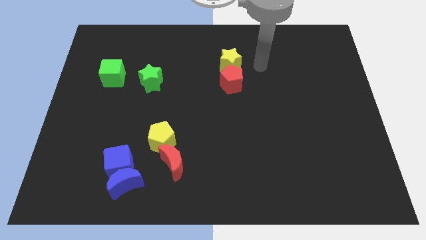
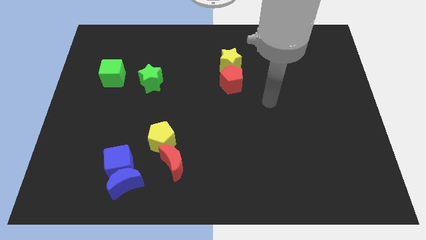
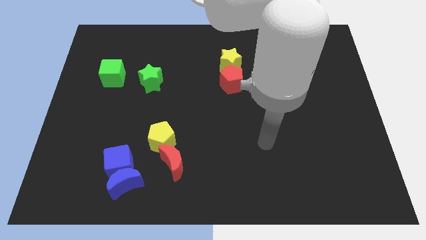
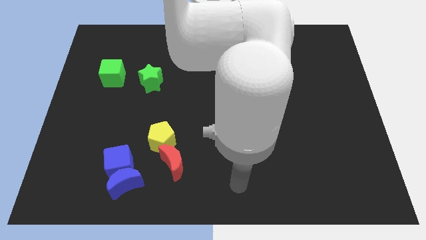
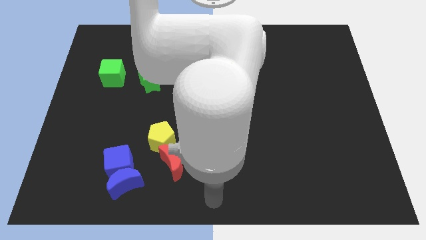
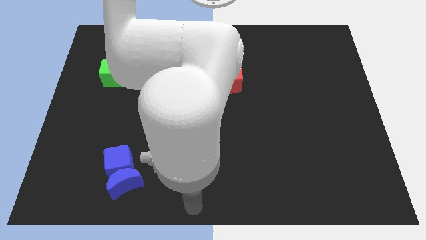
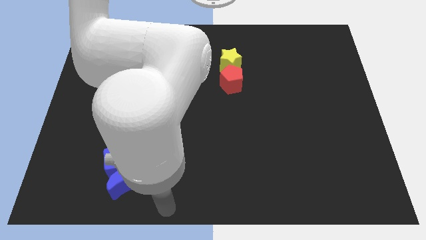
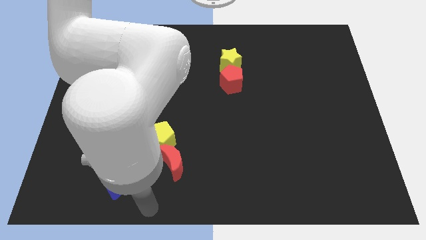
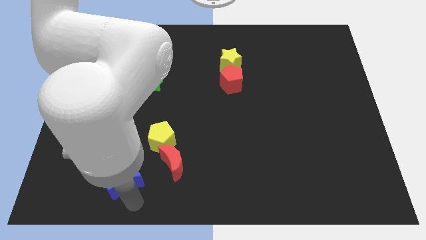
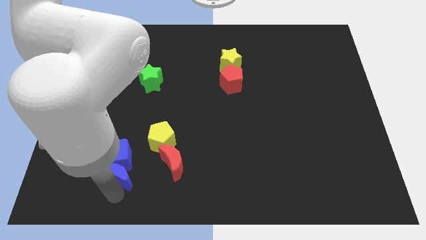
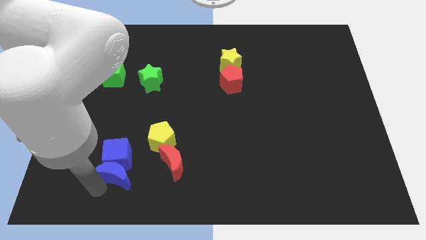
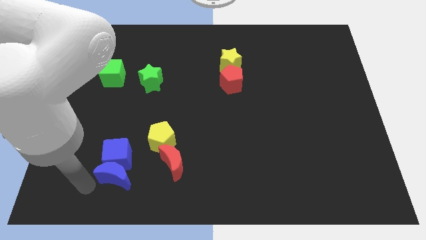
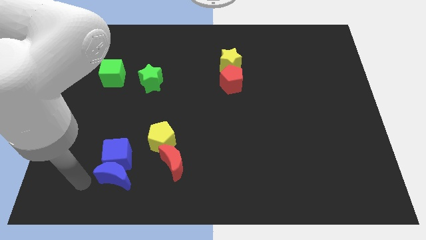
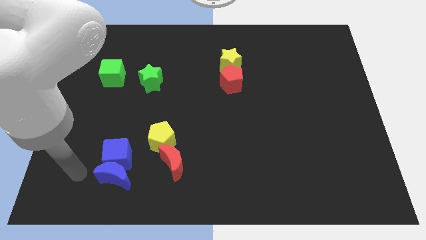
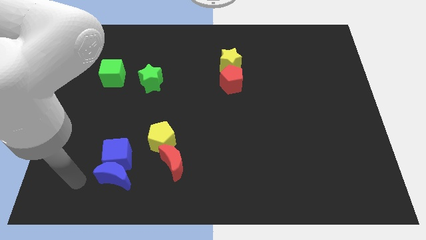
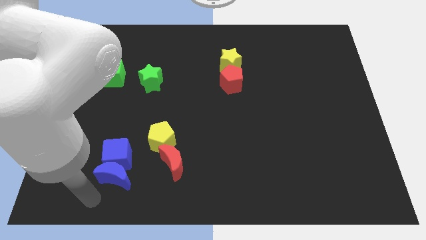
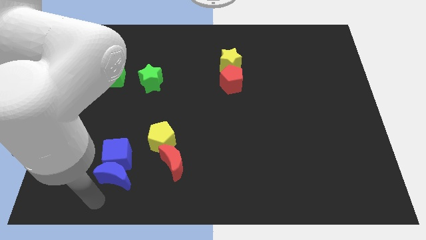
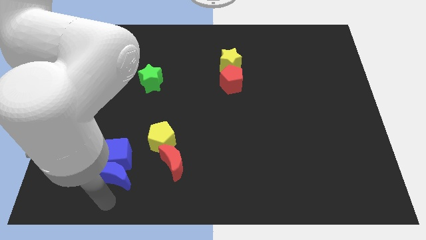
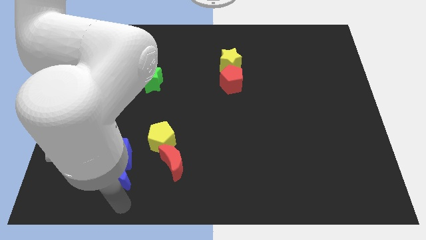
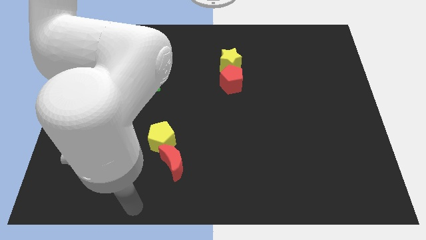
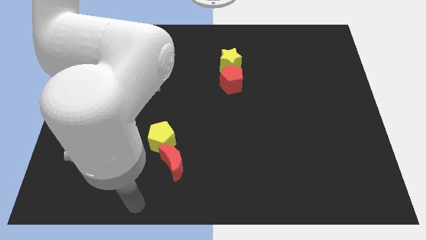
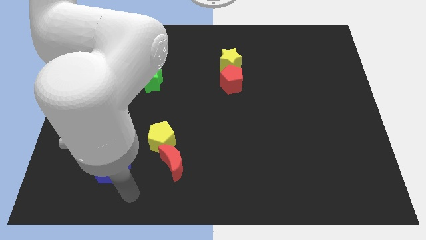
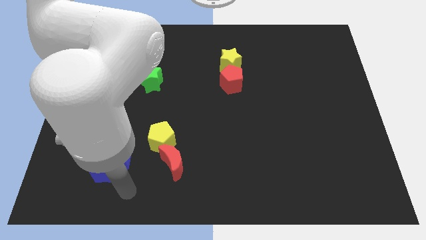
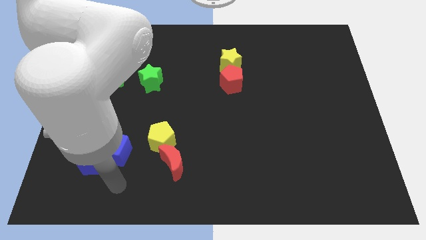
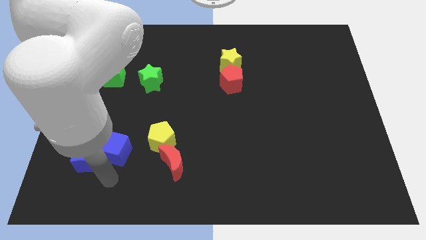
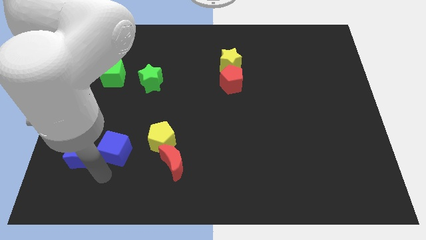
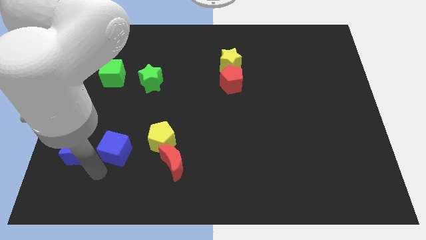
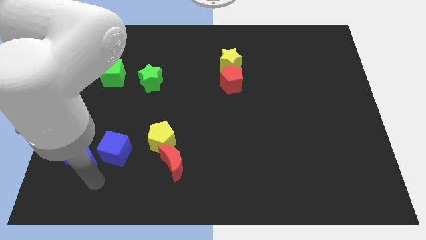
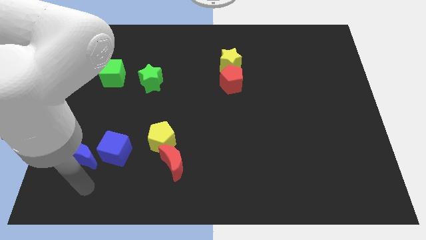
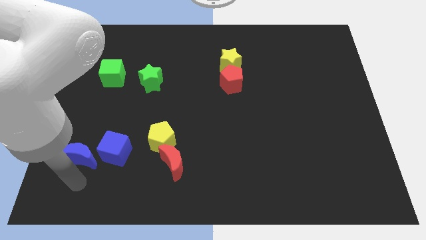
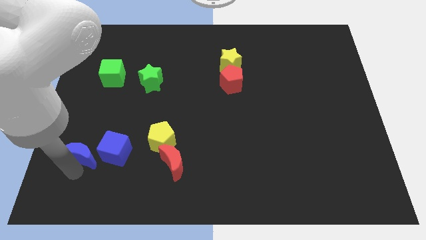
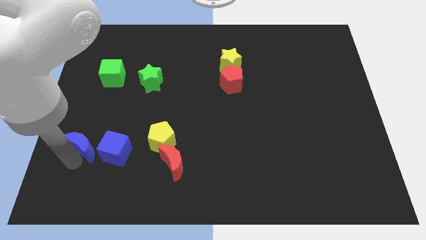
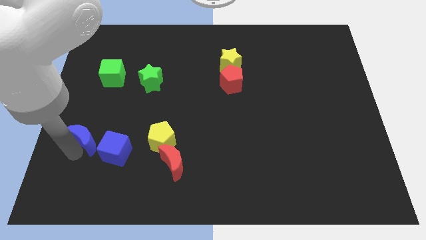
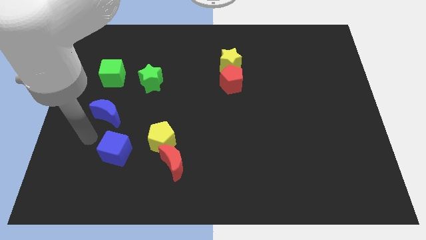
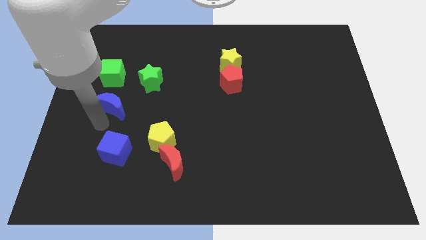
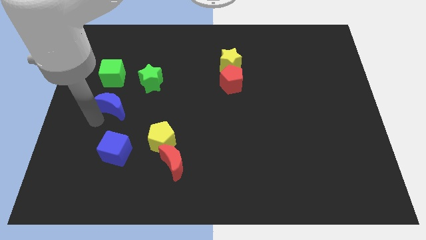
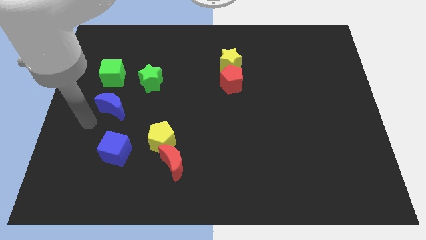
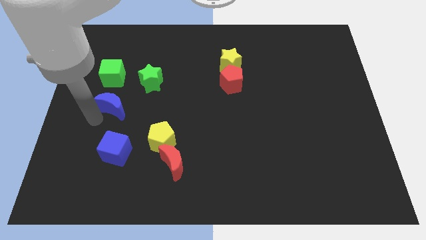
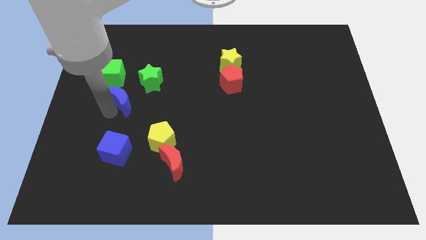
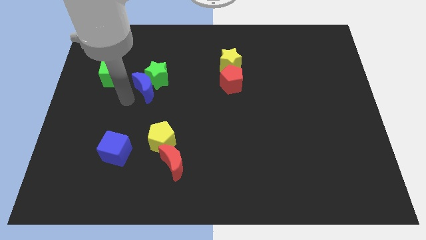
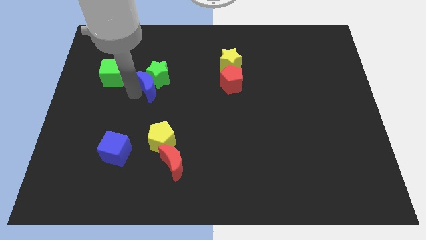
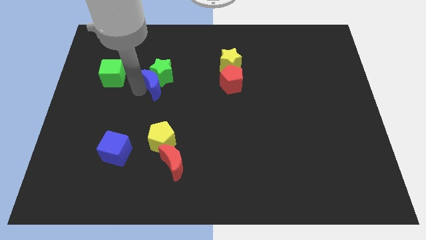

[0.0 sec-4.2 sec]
move the blue moon to the green star

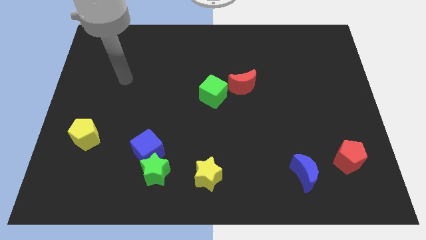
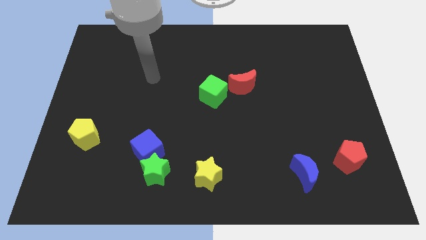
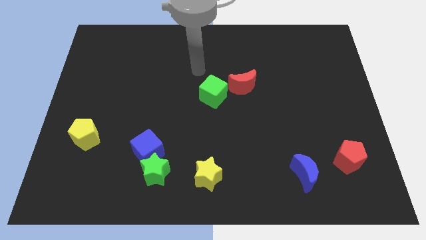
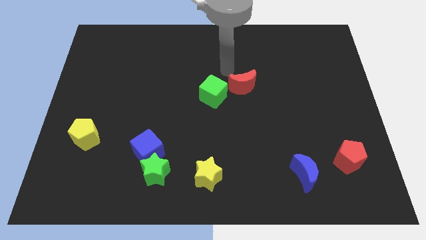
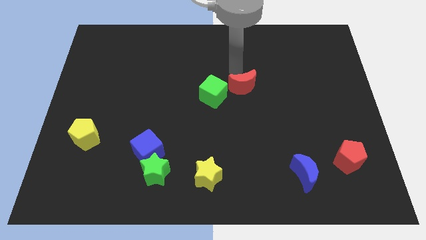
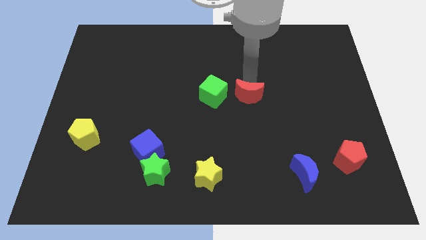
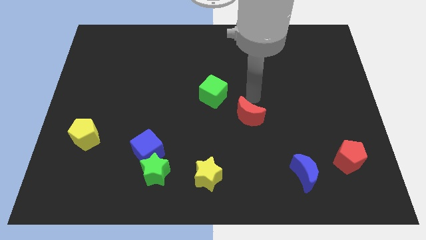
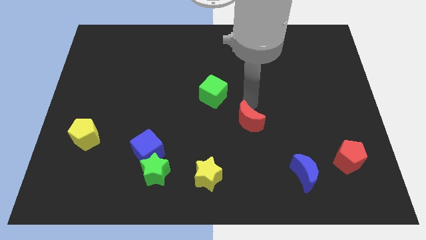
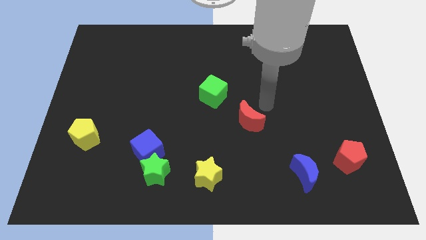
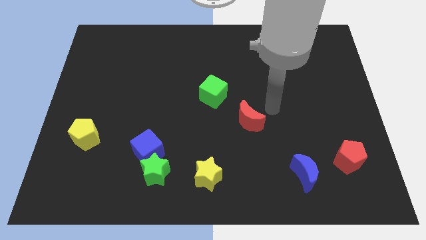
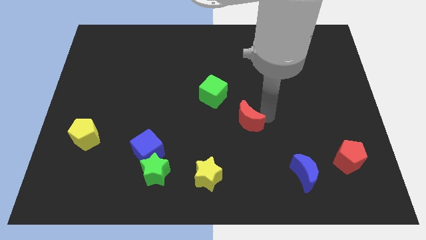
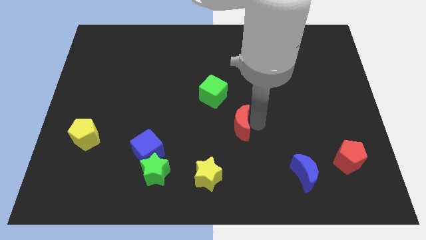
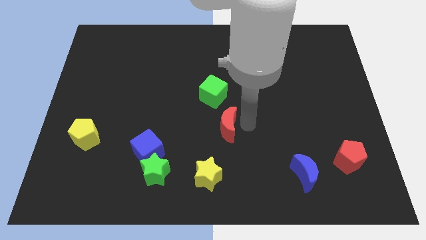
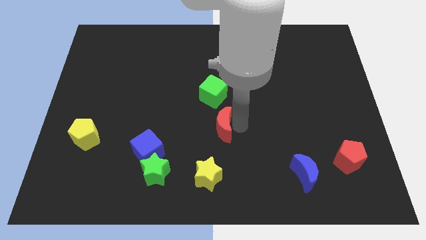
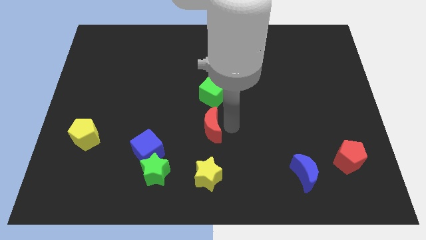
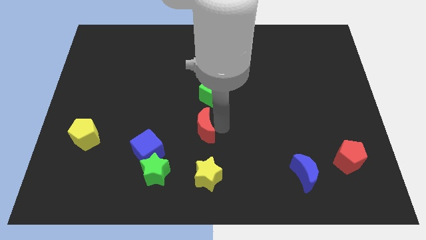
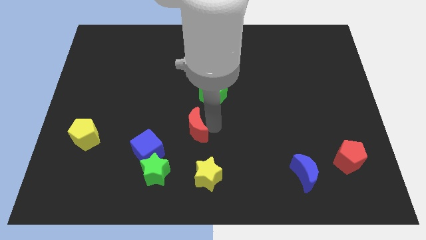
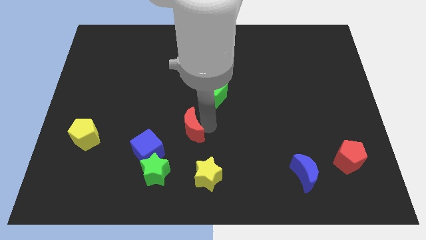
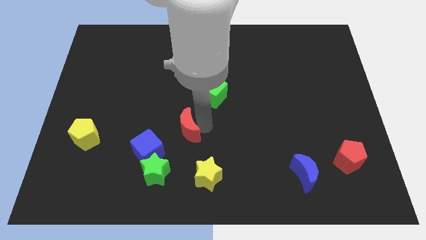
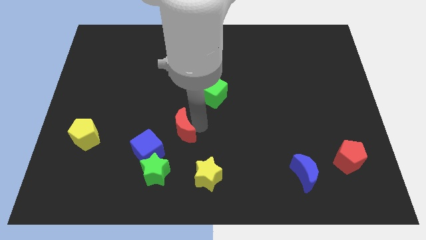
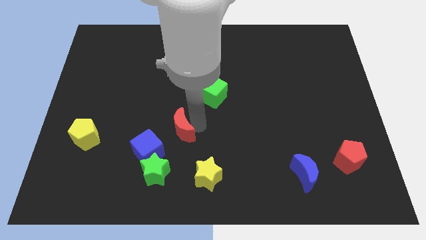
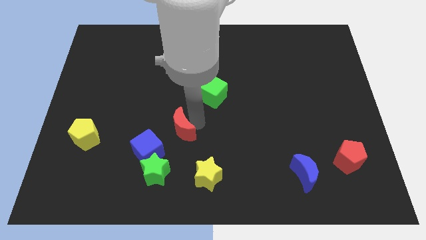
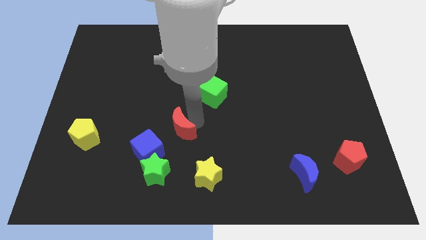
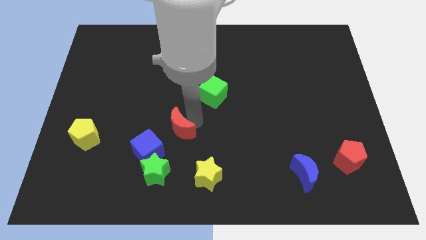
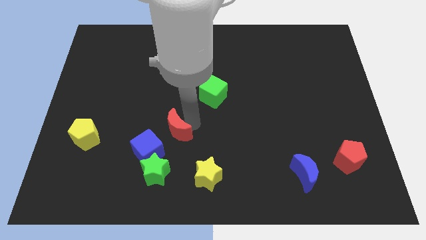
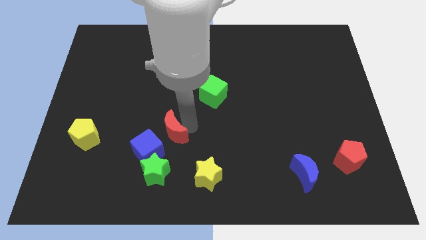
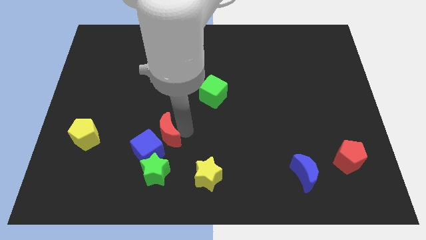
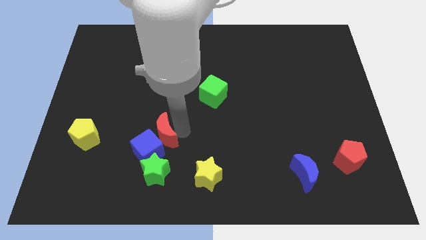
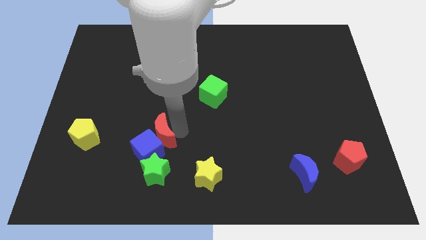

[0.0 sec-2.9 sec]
put the red moon next to the blue cube

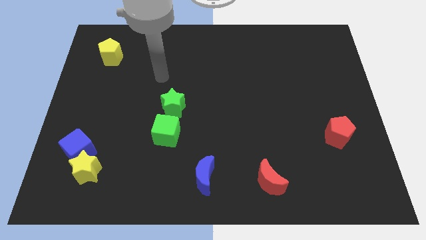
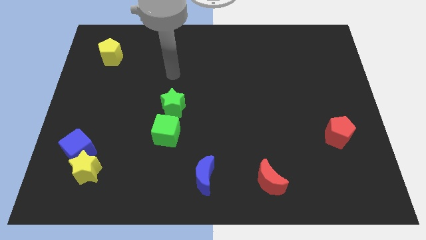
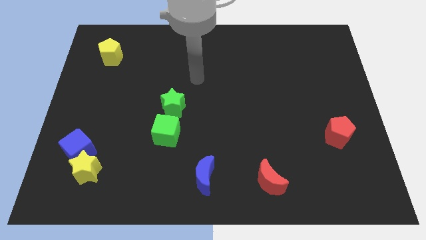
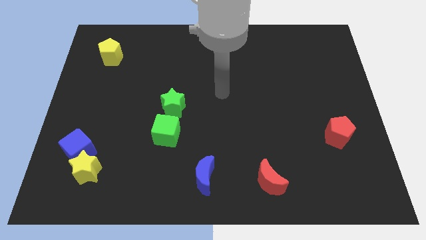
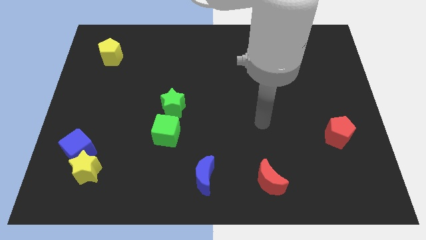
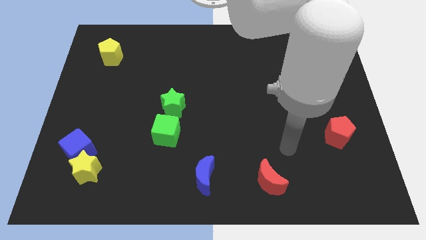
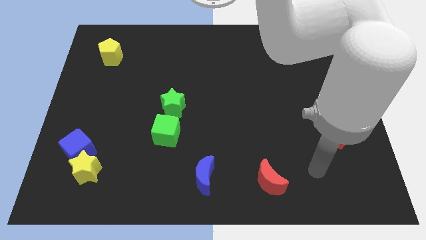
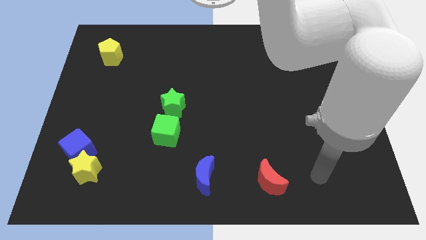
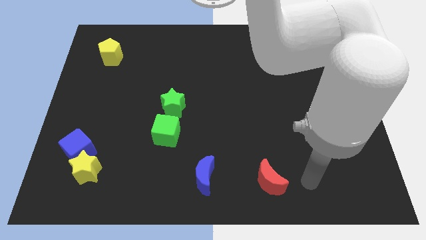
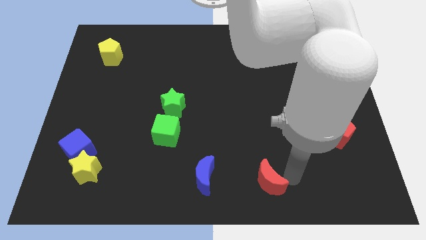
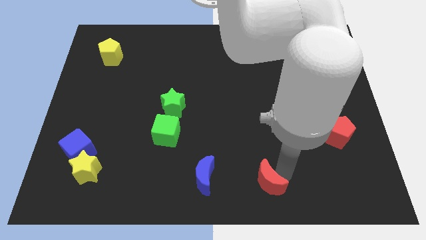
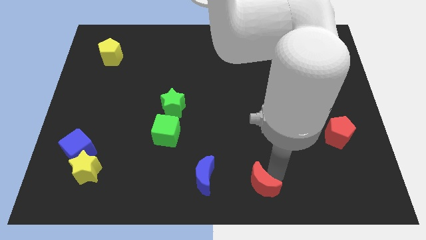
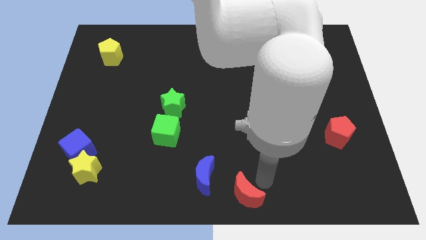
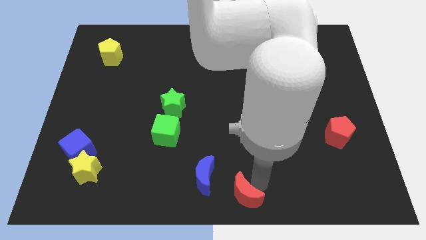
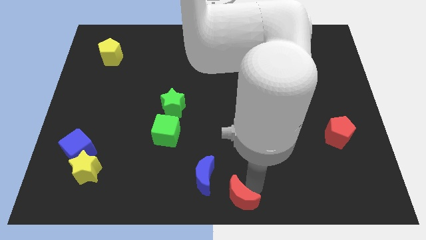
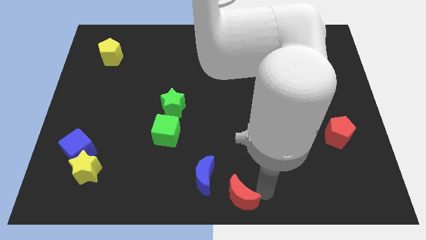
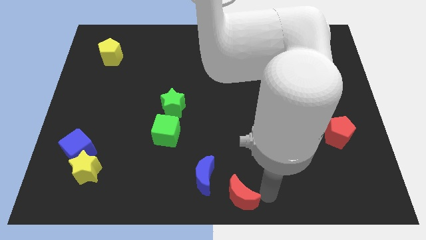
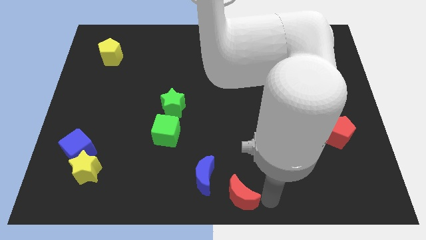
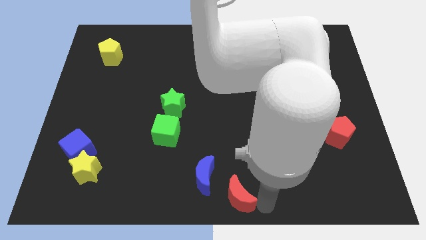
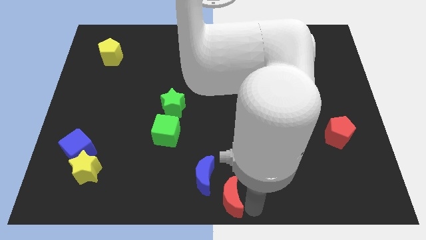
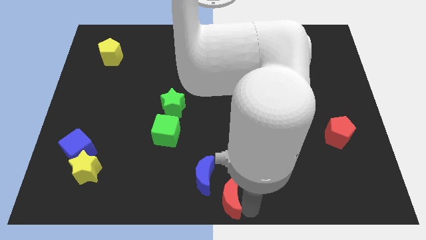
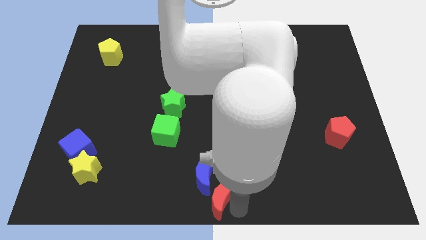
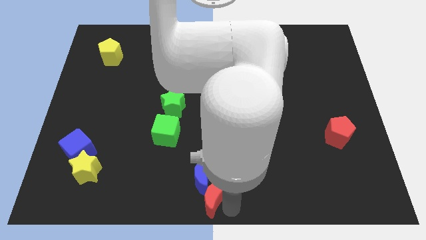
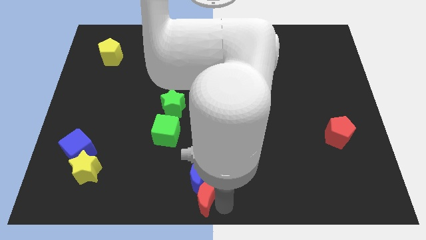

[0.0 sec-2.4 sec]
put the red moon next to the blue moon
